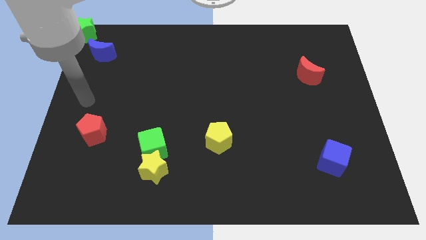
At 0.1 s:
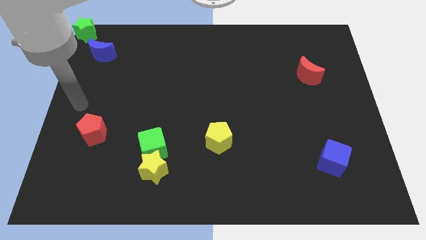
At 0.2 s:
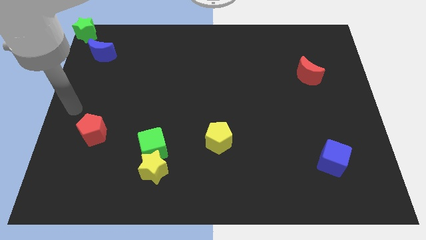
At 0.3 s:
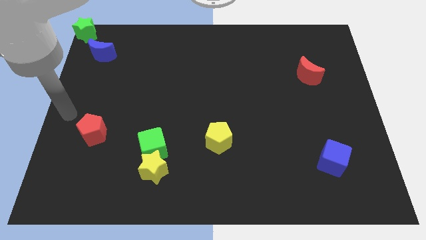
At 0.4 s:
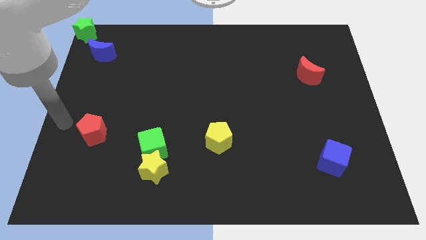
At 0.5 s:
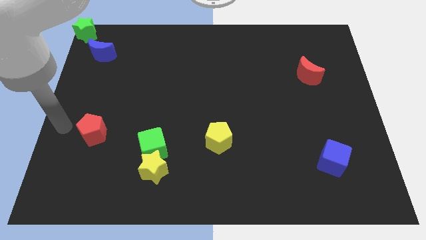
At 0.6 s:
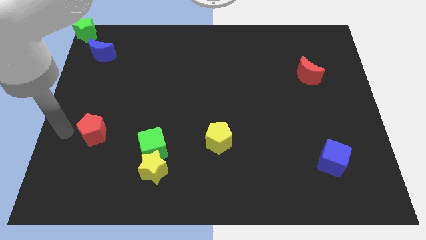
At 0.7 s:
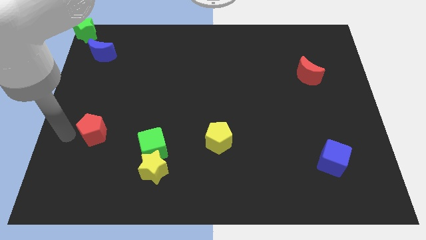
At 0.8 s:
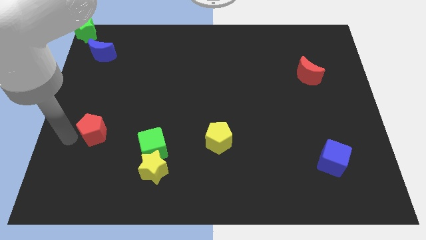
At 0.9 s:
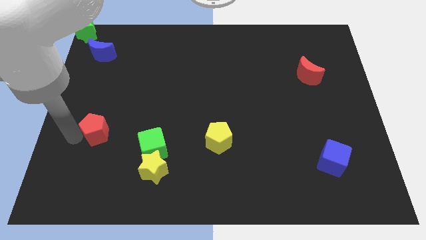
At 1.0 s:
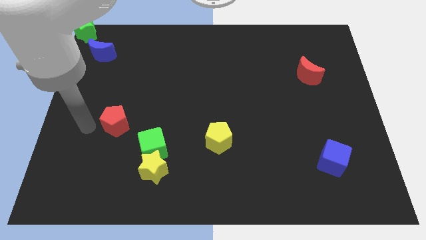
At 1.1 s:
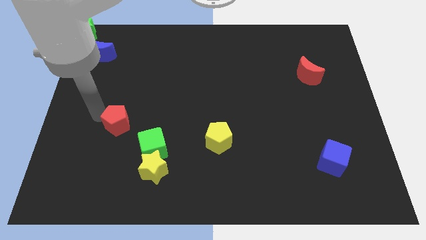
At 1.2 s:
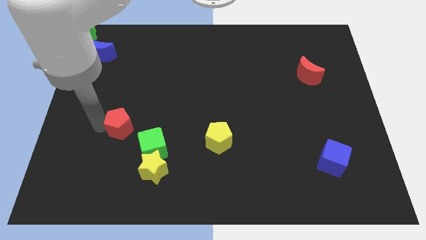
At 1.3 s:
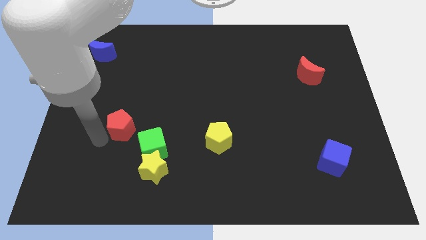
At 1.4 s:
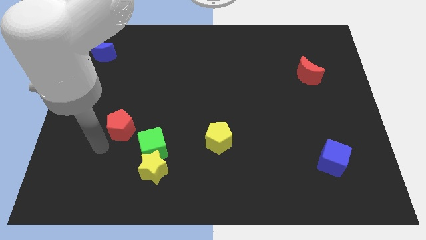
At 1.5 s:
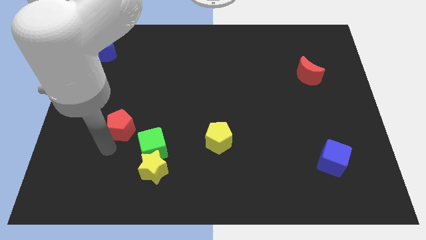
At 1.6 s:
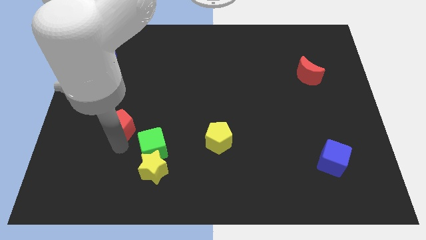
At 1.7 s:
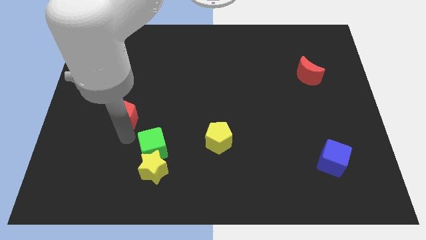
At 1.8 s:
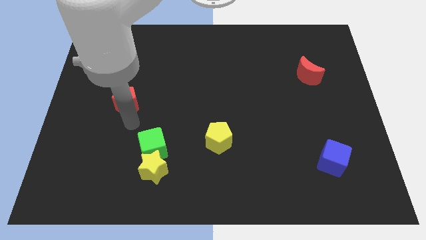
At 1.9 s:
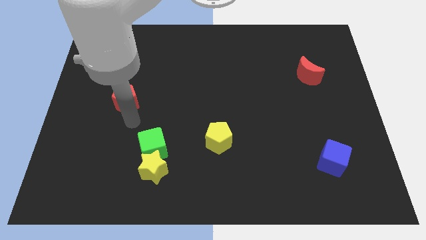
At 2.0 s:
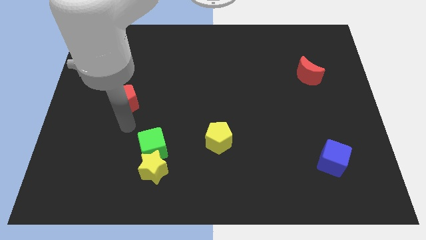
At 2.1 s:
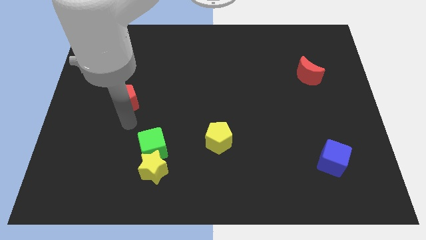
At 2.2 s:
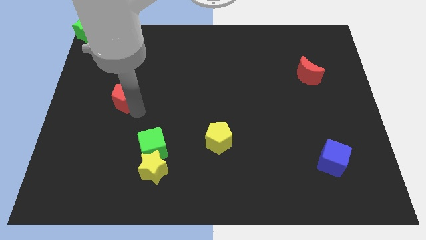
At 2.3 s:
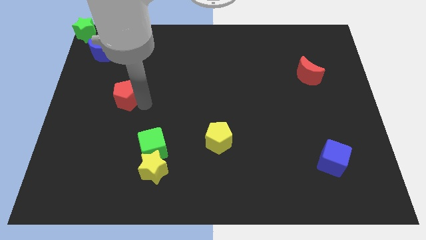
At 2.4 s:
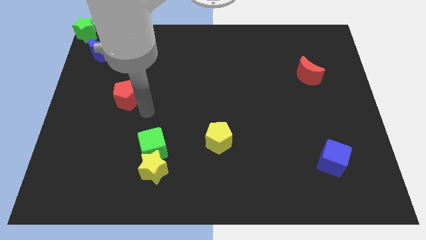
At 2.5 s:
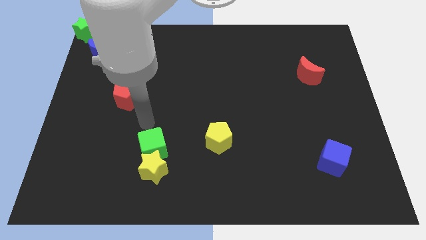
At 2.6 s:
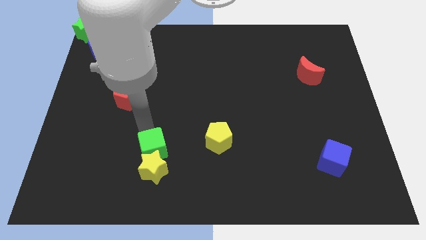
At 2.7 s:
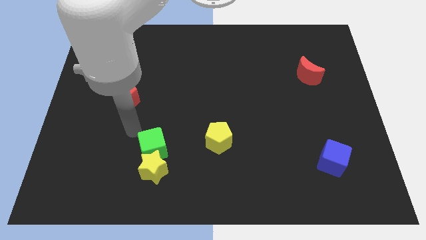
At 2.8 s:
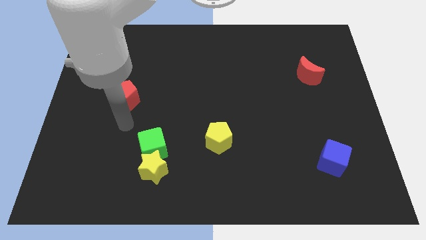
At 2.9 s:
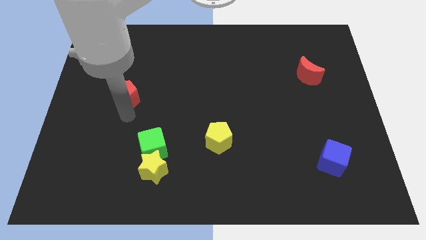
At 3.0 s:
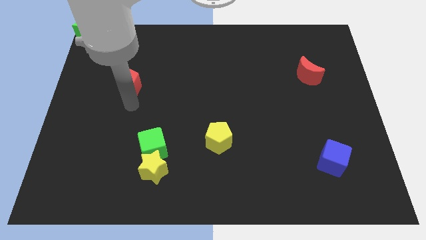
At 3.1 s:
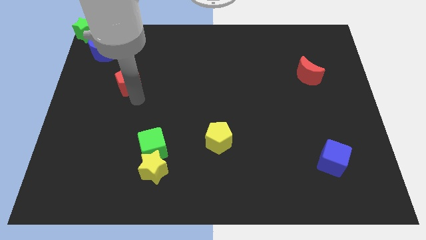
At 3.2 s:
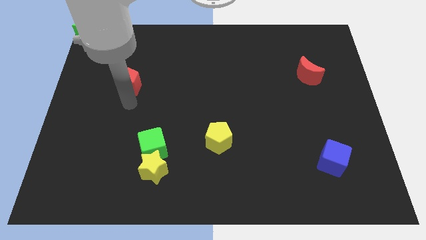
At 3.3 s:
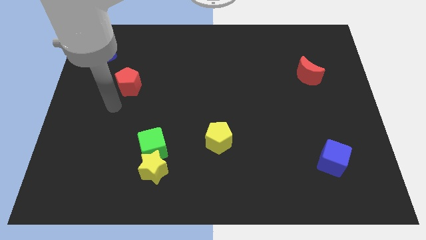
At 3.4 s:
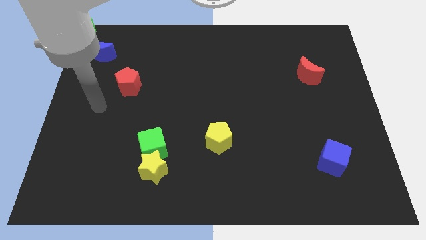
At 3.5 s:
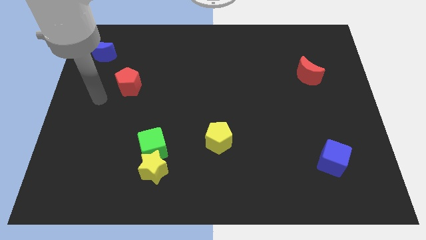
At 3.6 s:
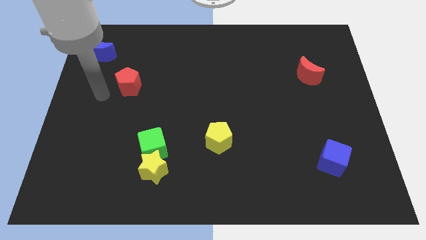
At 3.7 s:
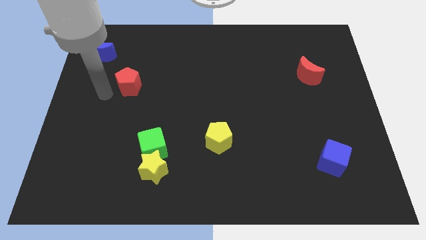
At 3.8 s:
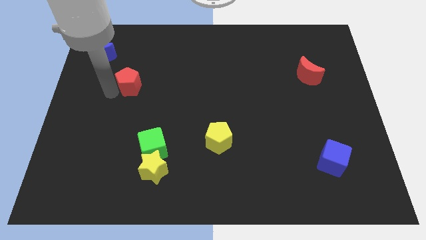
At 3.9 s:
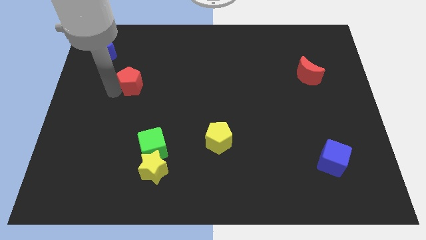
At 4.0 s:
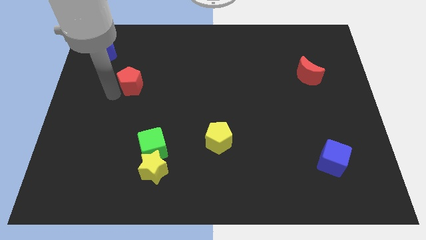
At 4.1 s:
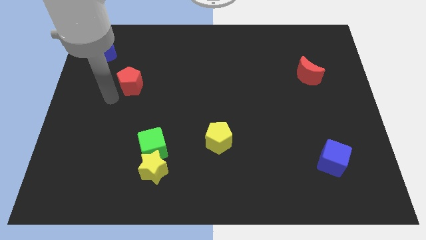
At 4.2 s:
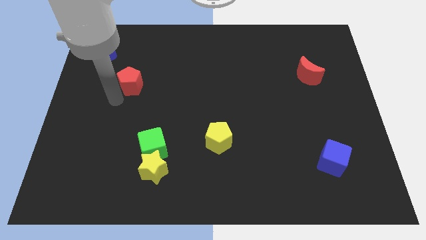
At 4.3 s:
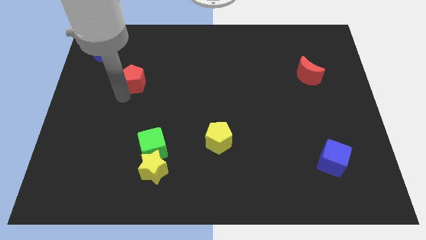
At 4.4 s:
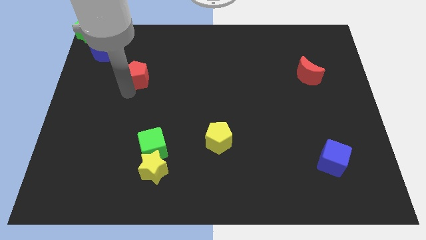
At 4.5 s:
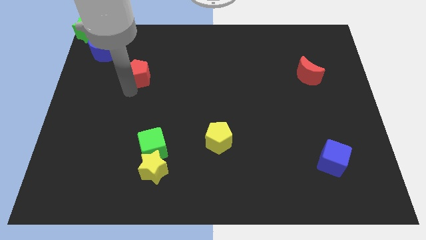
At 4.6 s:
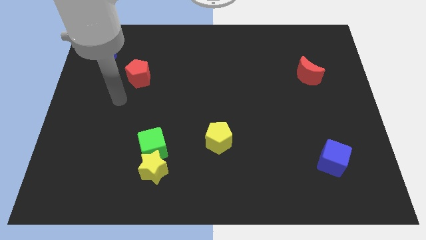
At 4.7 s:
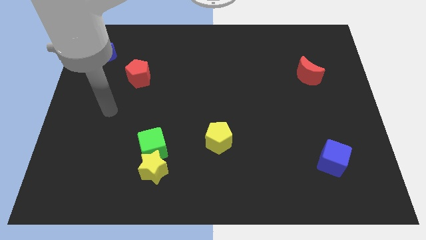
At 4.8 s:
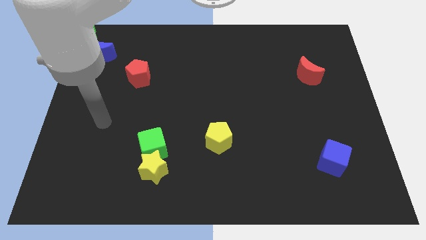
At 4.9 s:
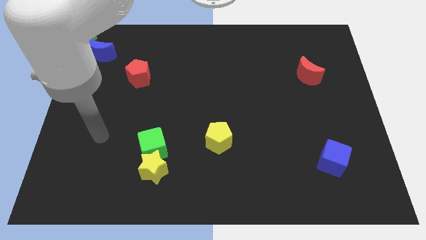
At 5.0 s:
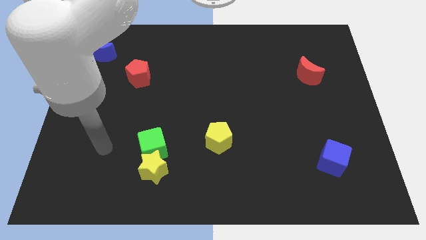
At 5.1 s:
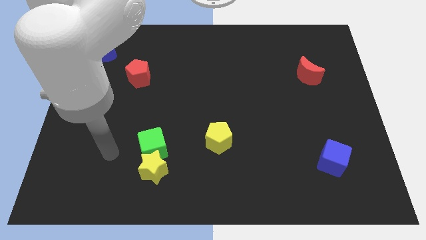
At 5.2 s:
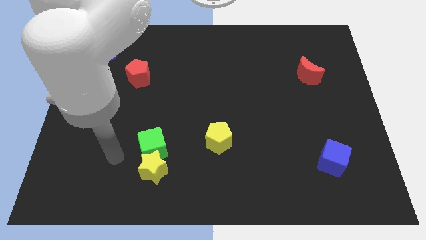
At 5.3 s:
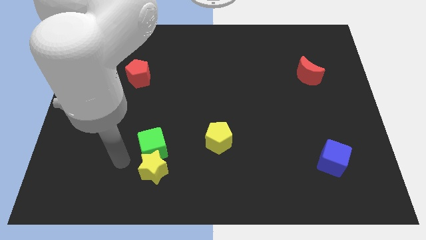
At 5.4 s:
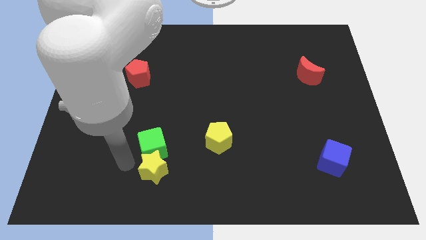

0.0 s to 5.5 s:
place the red pentagon to the bottom right of the blue crescent

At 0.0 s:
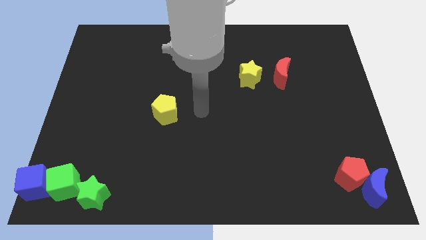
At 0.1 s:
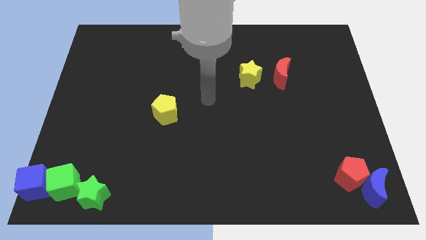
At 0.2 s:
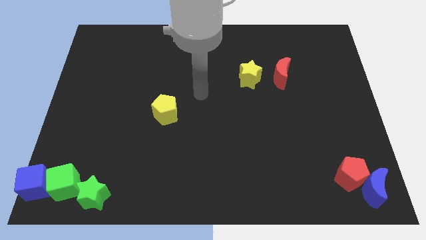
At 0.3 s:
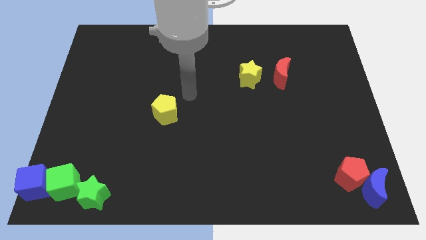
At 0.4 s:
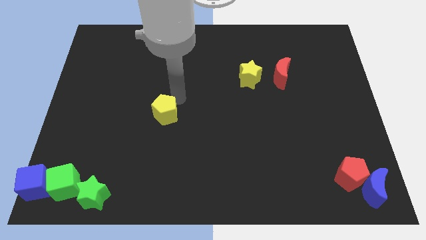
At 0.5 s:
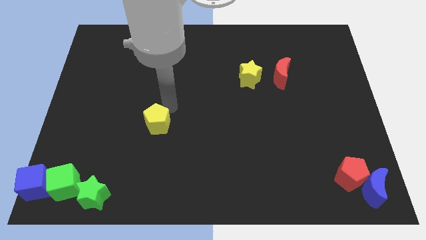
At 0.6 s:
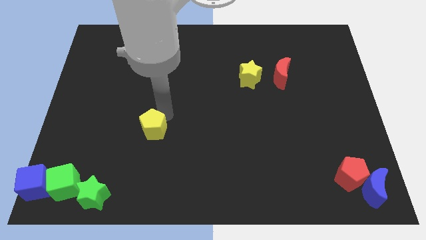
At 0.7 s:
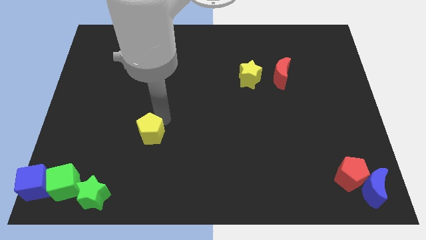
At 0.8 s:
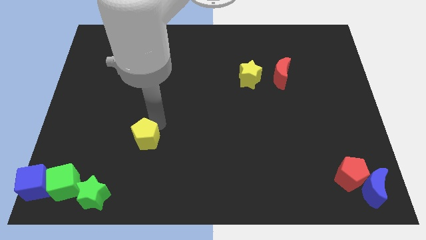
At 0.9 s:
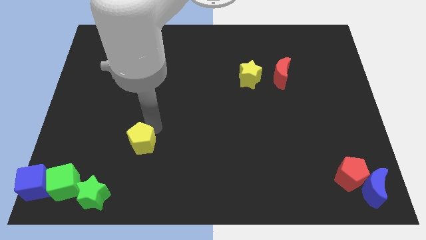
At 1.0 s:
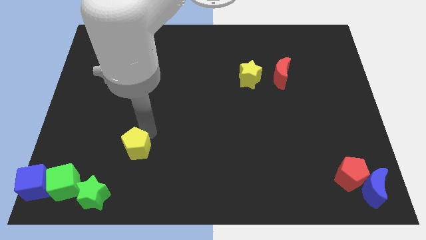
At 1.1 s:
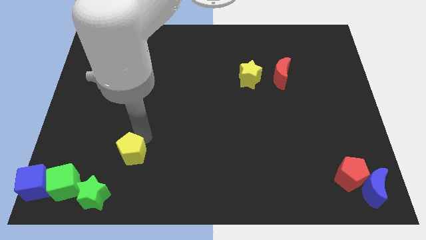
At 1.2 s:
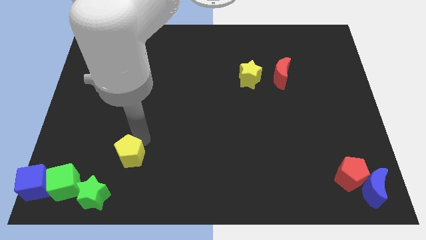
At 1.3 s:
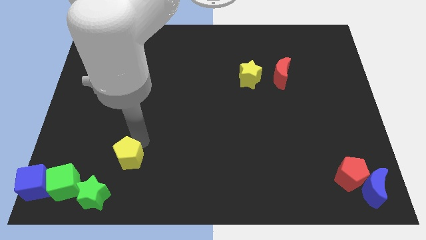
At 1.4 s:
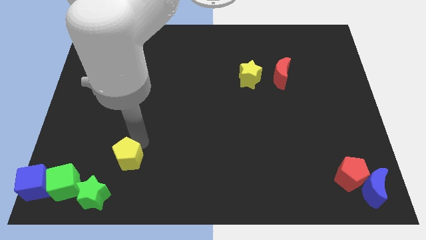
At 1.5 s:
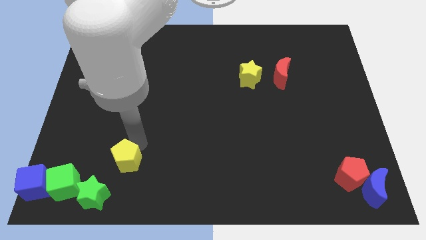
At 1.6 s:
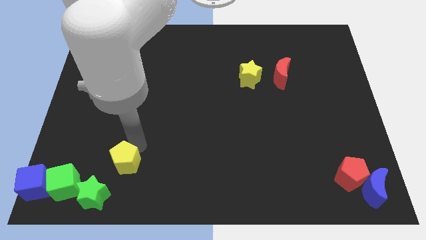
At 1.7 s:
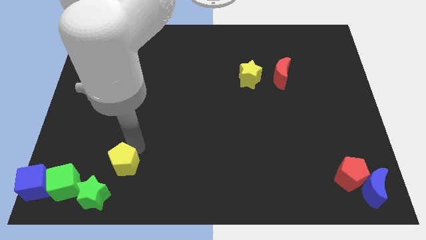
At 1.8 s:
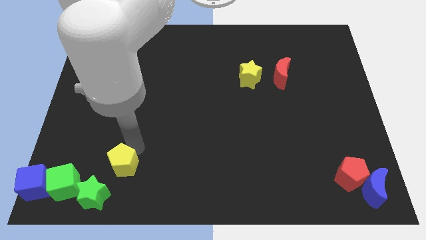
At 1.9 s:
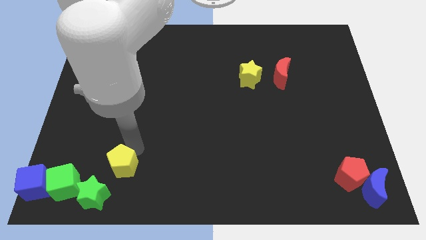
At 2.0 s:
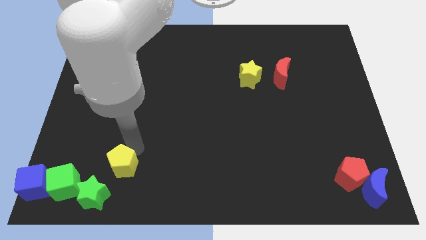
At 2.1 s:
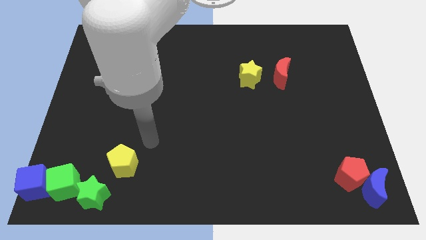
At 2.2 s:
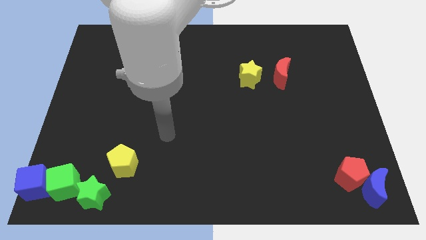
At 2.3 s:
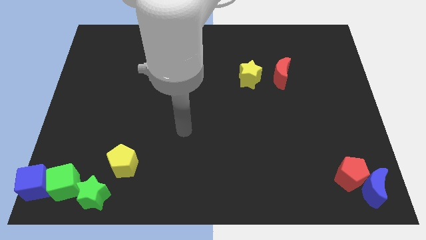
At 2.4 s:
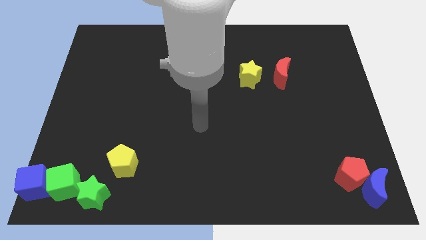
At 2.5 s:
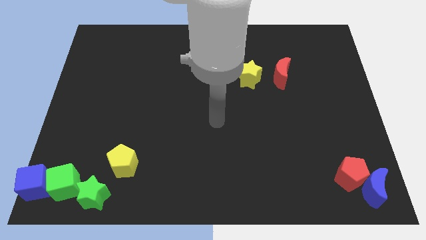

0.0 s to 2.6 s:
place the yellow pentagon above the green star

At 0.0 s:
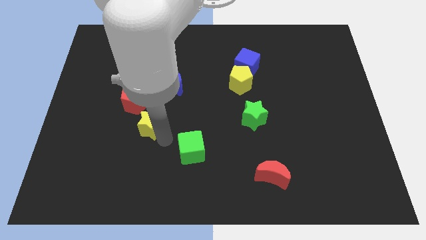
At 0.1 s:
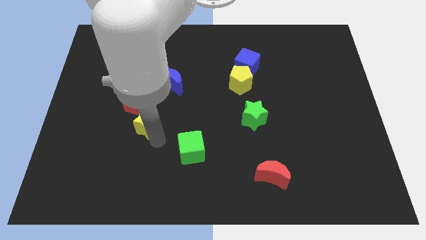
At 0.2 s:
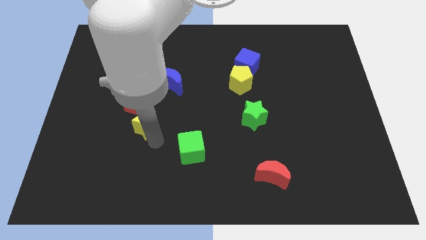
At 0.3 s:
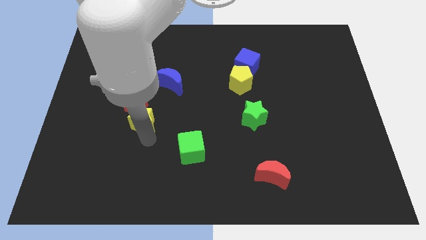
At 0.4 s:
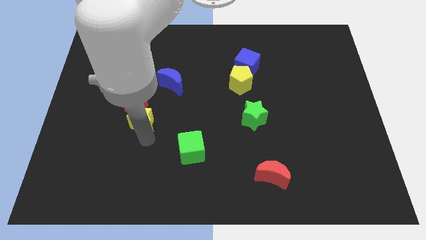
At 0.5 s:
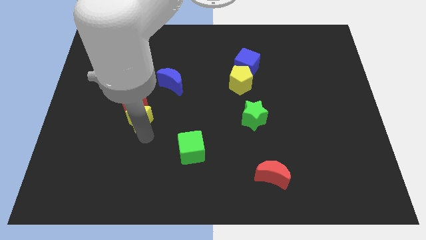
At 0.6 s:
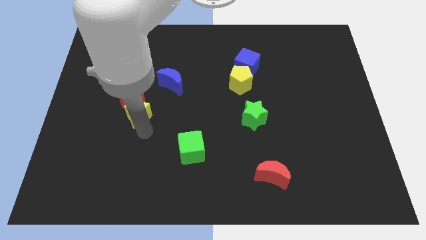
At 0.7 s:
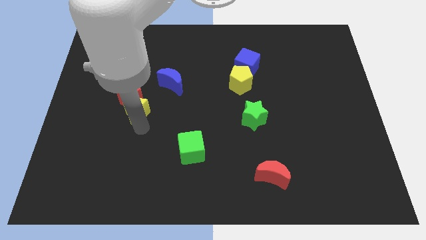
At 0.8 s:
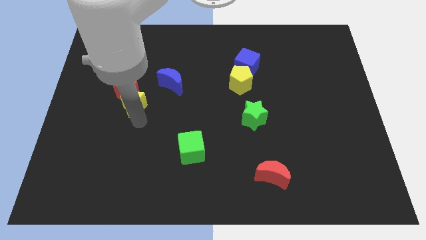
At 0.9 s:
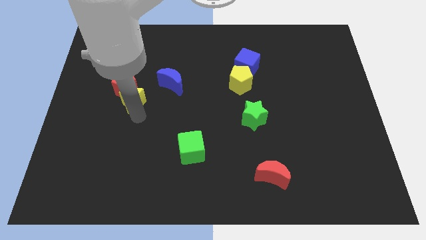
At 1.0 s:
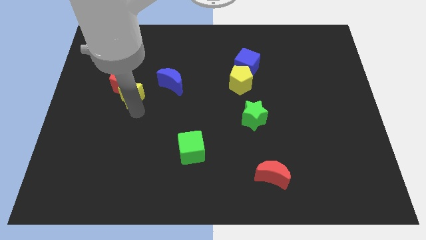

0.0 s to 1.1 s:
move the yellow star and red pentagon slightly to left
